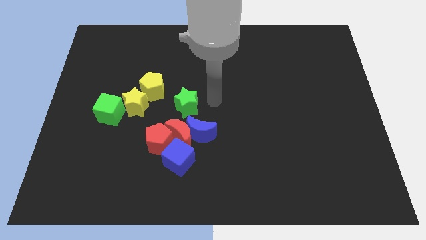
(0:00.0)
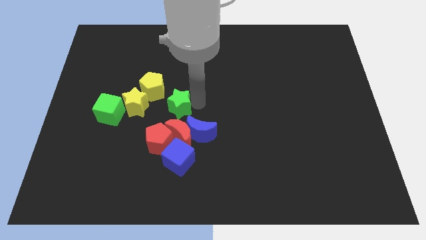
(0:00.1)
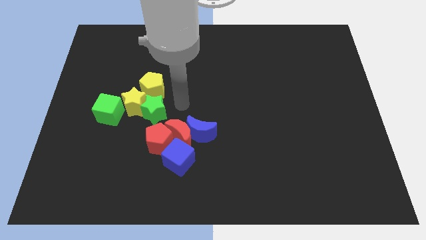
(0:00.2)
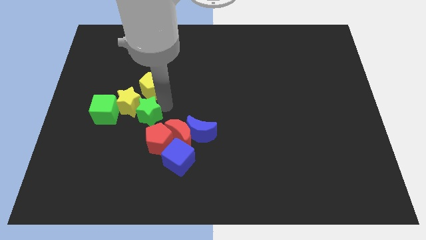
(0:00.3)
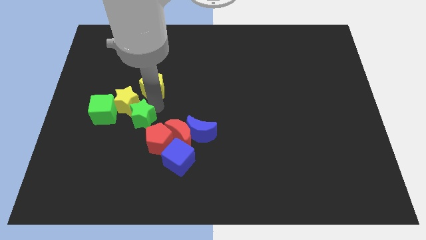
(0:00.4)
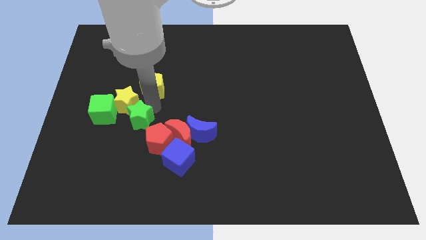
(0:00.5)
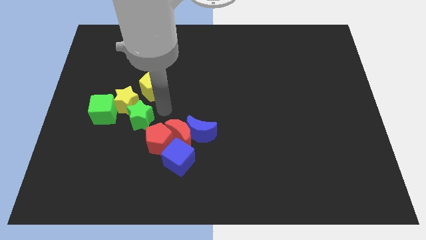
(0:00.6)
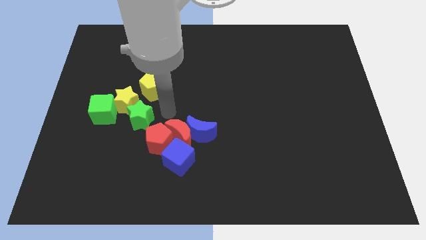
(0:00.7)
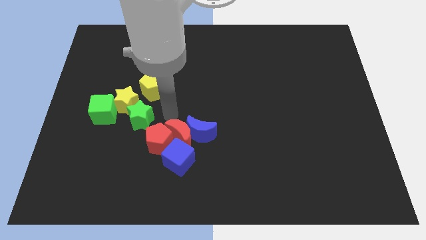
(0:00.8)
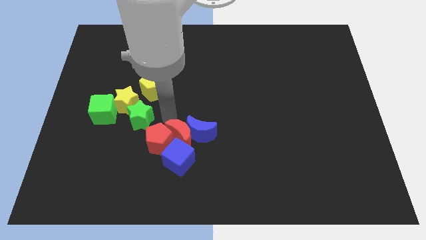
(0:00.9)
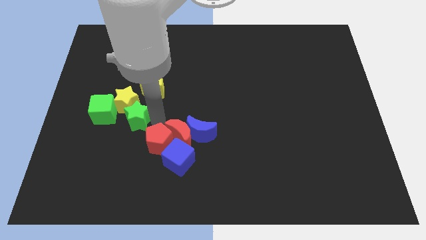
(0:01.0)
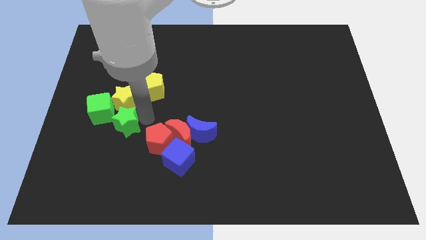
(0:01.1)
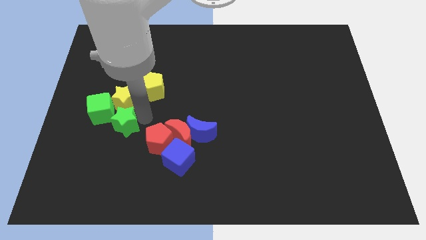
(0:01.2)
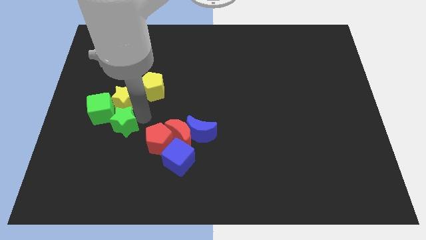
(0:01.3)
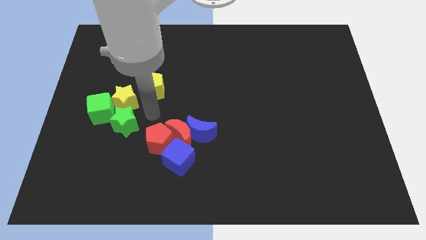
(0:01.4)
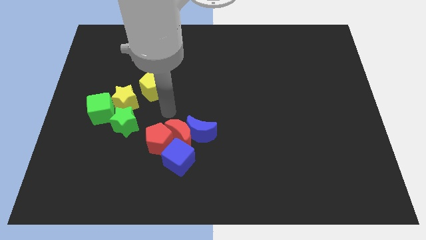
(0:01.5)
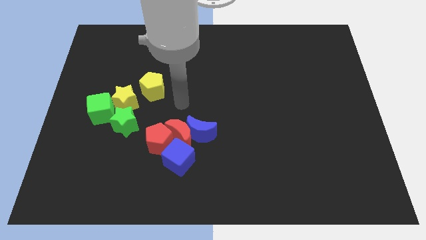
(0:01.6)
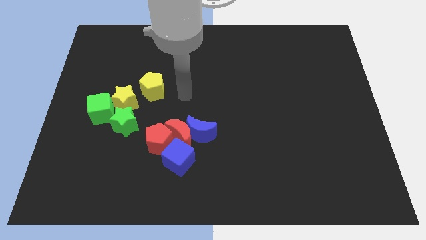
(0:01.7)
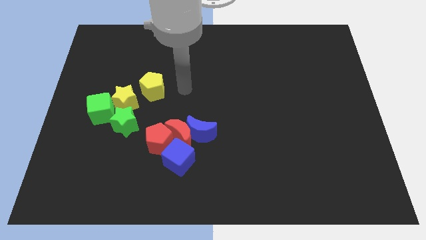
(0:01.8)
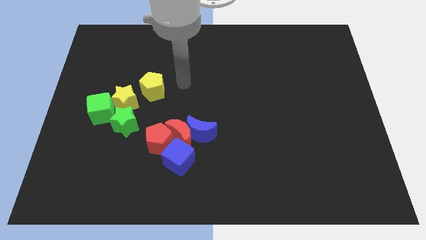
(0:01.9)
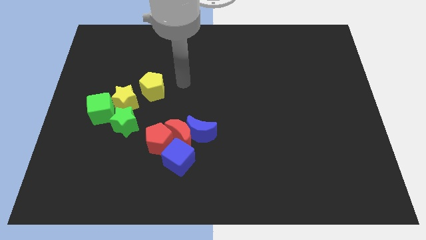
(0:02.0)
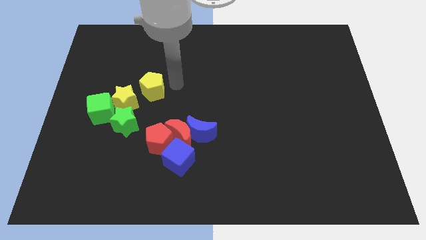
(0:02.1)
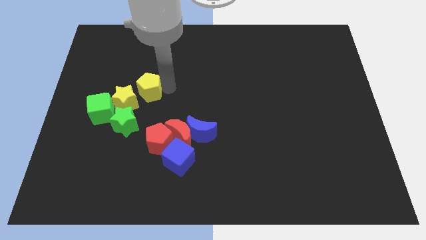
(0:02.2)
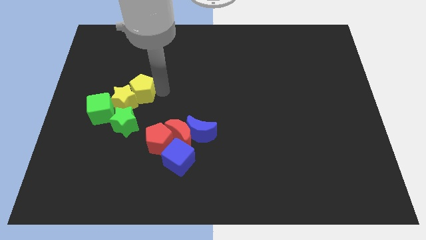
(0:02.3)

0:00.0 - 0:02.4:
push the green star into the bottom of the green cube

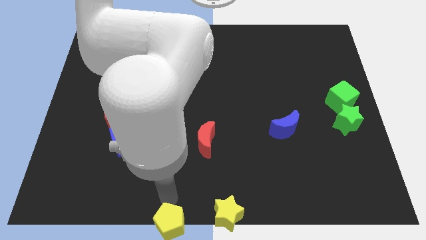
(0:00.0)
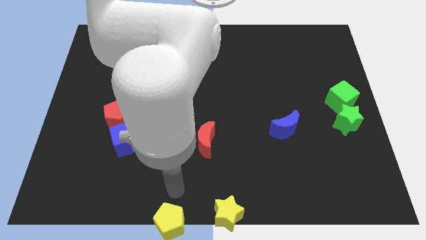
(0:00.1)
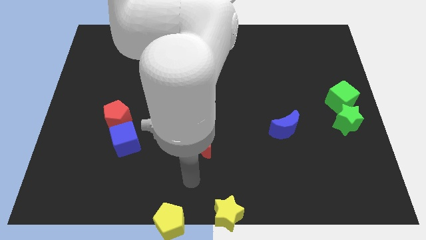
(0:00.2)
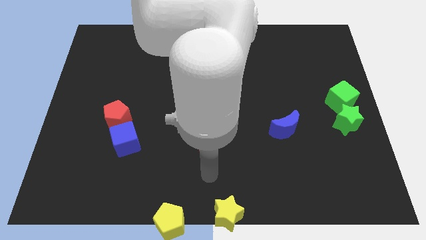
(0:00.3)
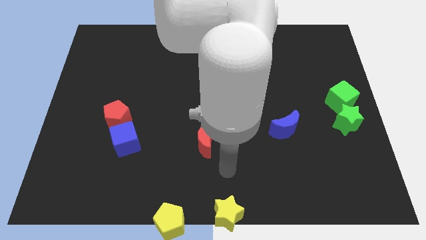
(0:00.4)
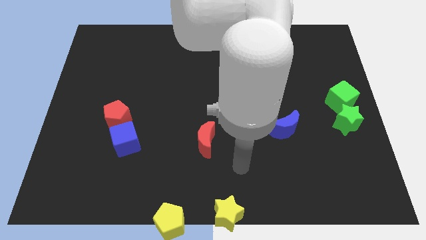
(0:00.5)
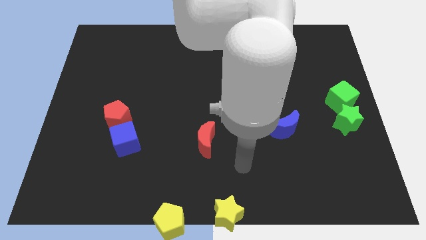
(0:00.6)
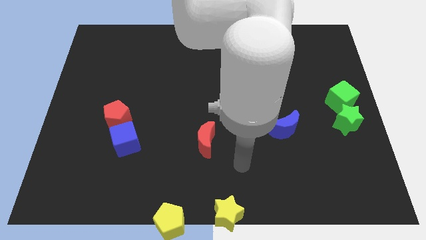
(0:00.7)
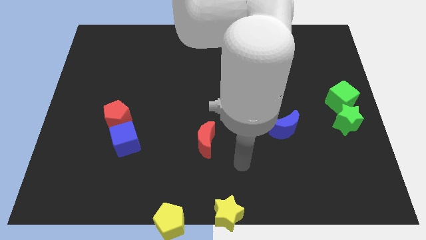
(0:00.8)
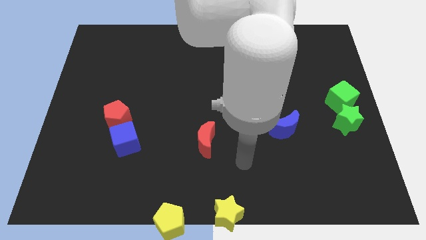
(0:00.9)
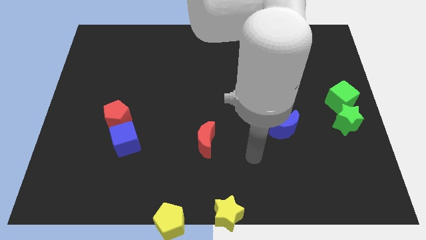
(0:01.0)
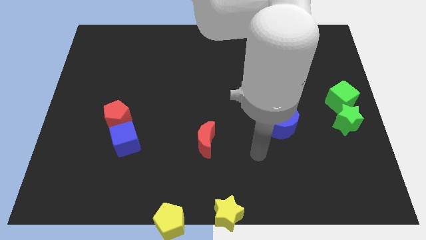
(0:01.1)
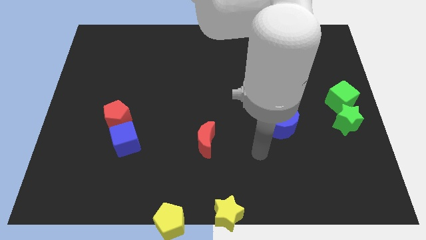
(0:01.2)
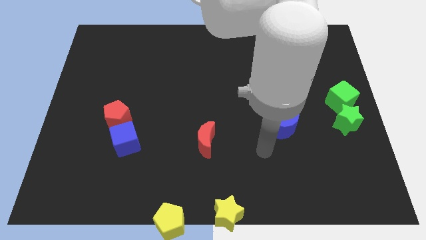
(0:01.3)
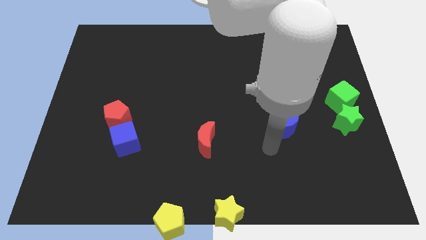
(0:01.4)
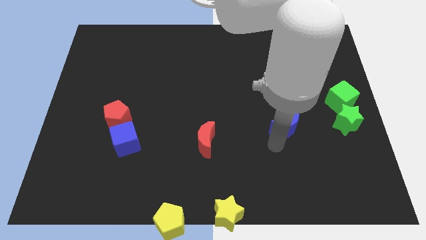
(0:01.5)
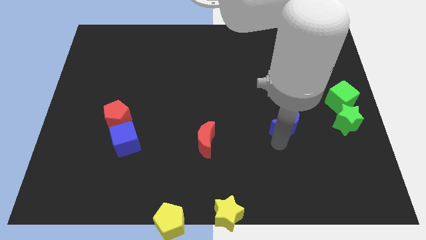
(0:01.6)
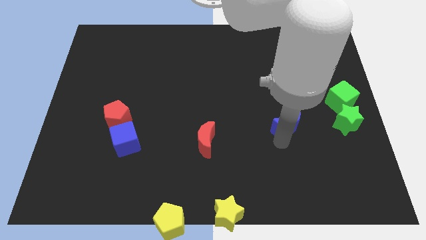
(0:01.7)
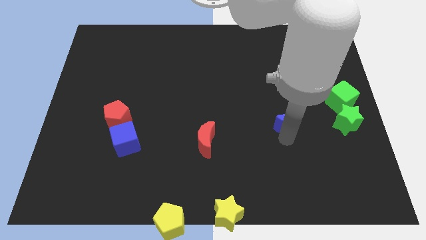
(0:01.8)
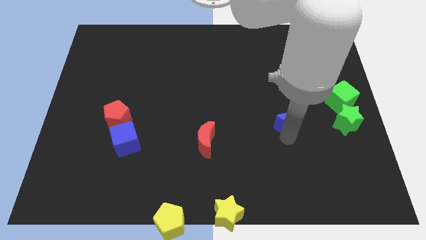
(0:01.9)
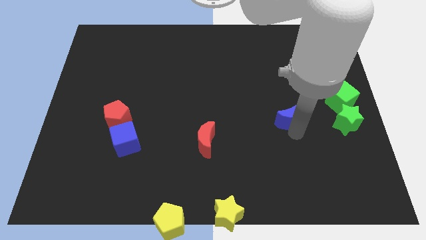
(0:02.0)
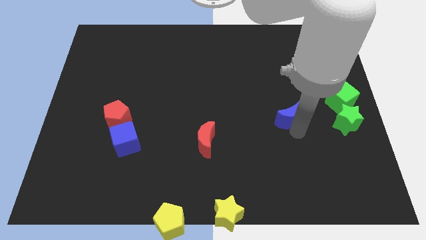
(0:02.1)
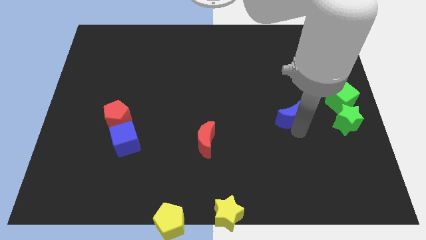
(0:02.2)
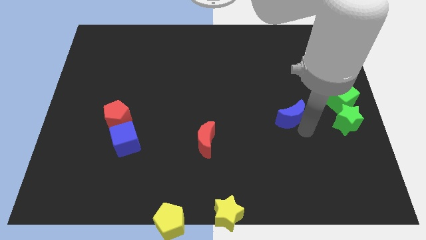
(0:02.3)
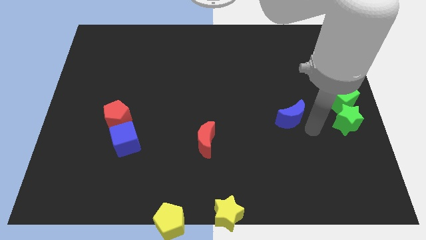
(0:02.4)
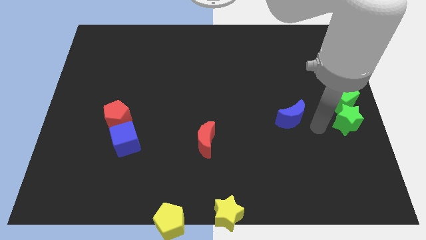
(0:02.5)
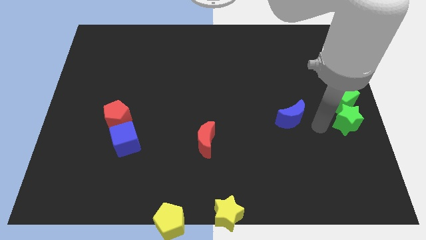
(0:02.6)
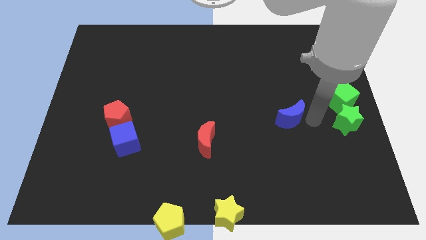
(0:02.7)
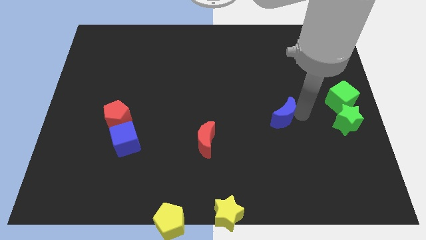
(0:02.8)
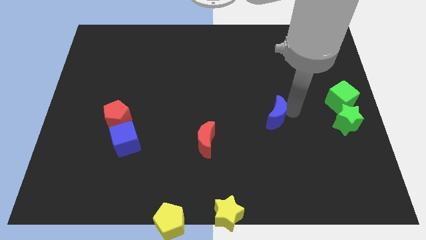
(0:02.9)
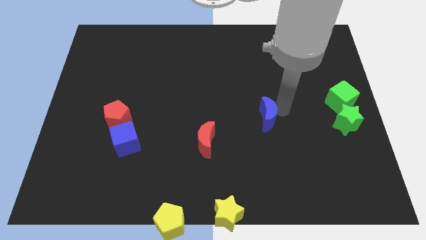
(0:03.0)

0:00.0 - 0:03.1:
place the blue moon to the left of the green star

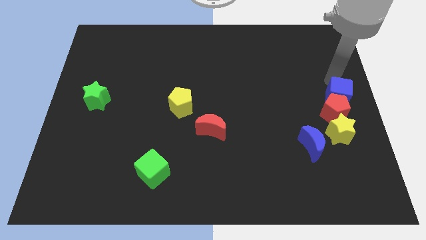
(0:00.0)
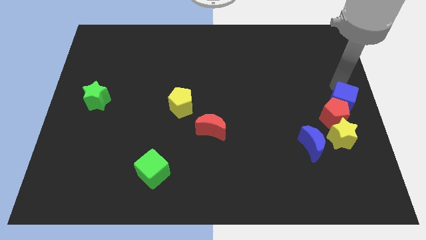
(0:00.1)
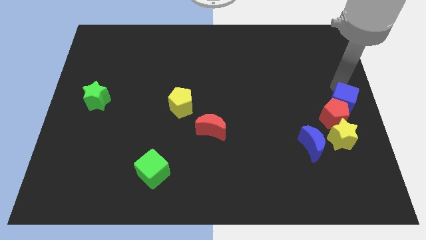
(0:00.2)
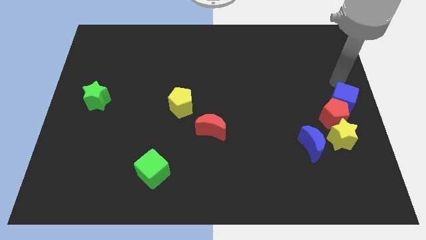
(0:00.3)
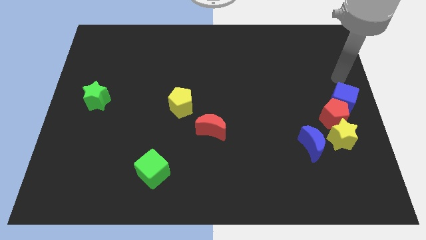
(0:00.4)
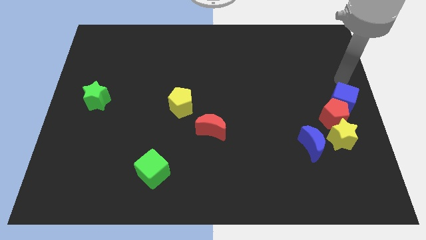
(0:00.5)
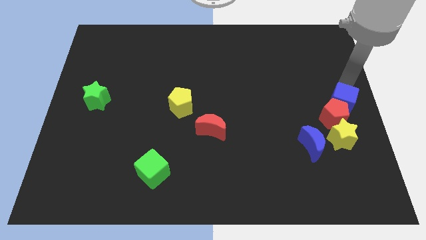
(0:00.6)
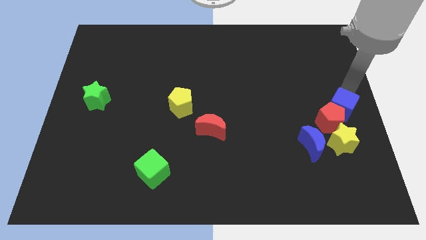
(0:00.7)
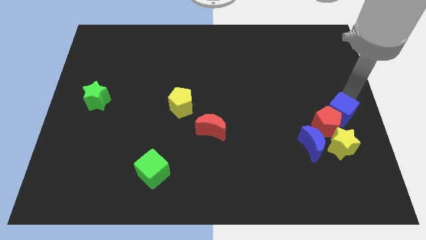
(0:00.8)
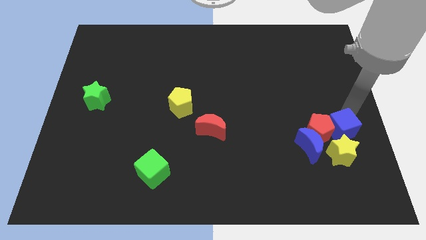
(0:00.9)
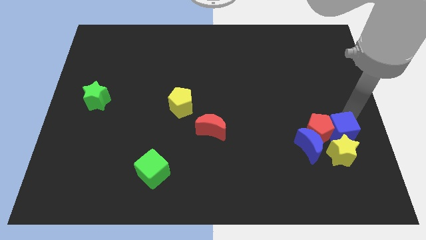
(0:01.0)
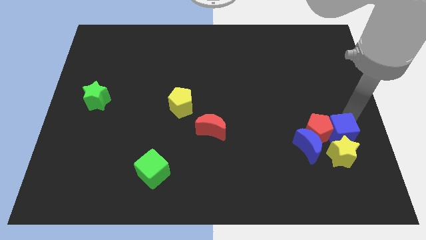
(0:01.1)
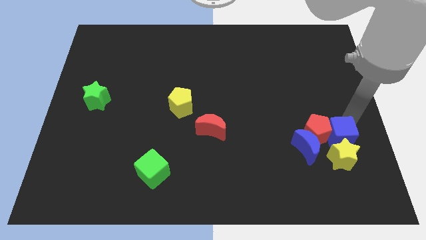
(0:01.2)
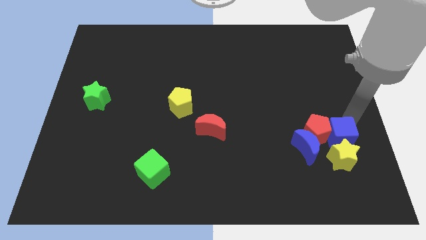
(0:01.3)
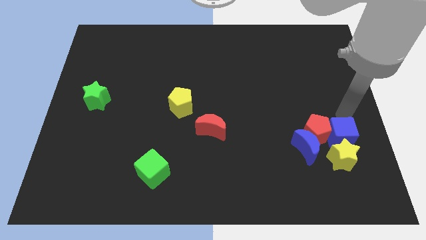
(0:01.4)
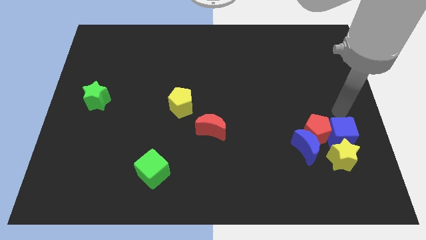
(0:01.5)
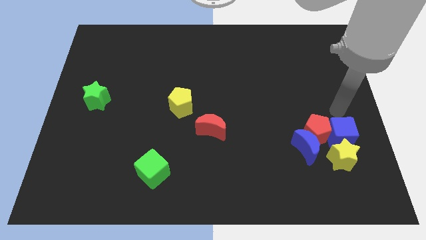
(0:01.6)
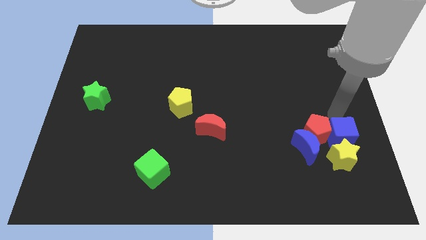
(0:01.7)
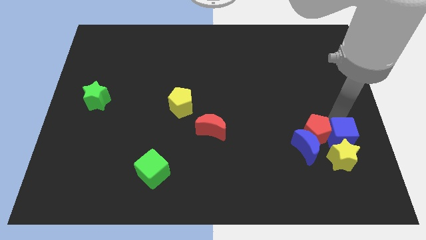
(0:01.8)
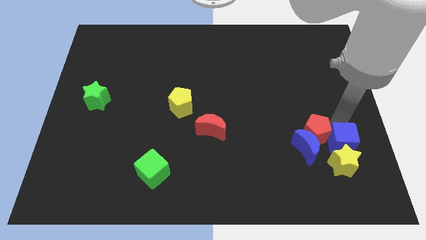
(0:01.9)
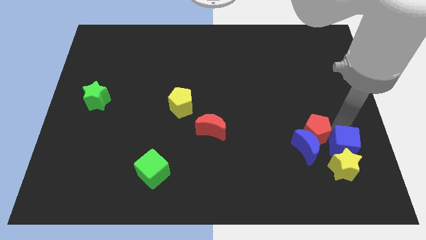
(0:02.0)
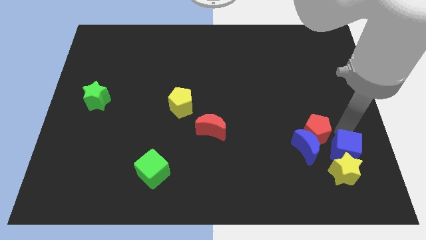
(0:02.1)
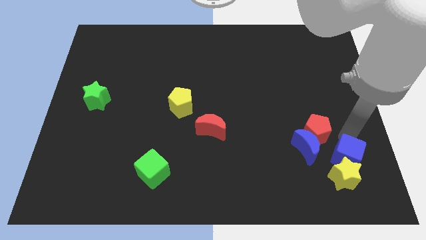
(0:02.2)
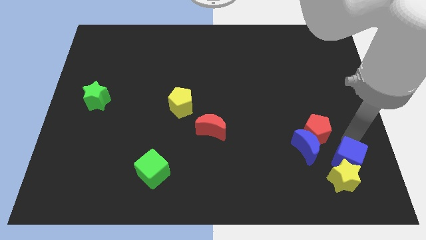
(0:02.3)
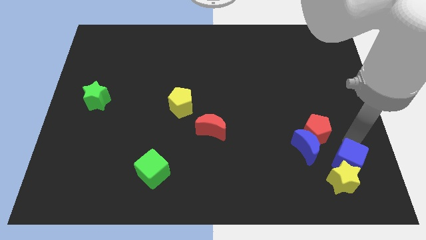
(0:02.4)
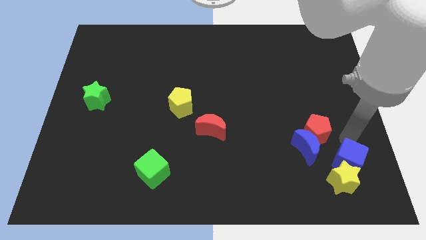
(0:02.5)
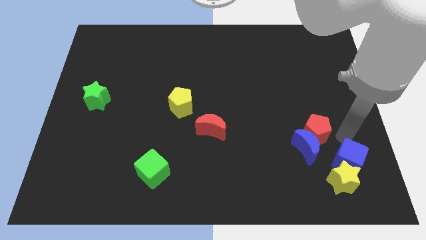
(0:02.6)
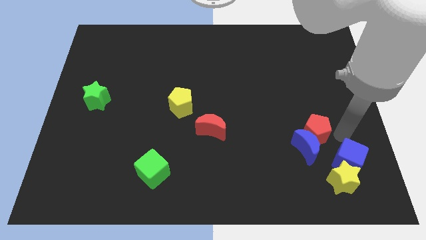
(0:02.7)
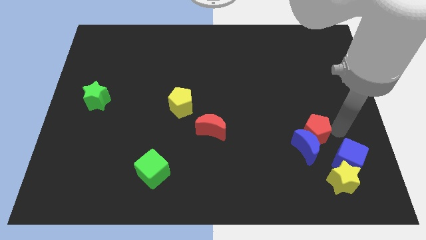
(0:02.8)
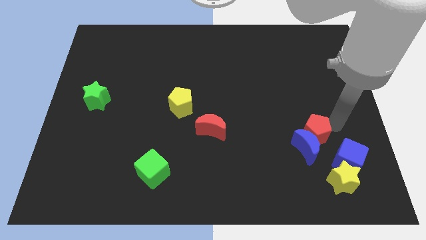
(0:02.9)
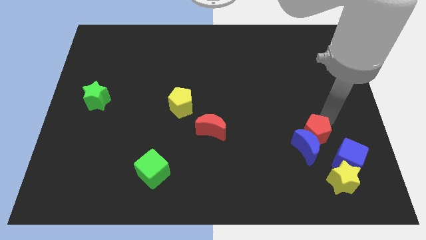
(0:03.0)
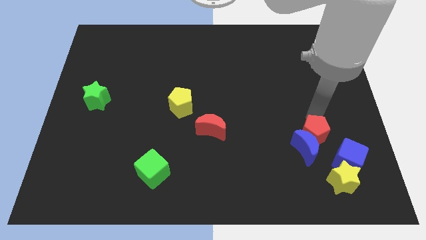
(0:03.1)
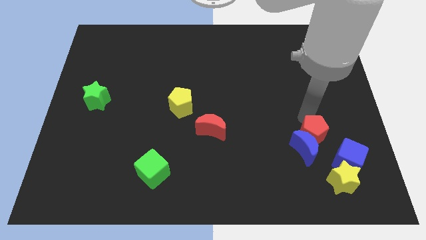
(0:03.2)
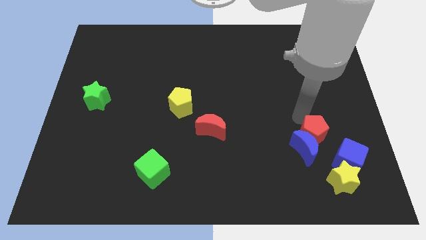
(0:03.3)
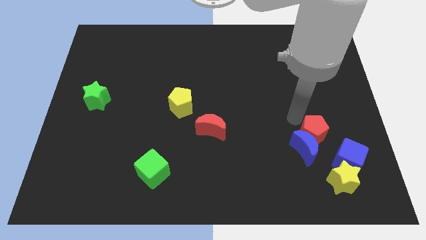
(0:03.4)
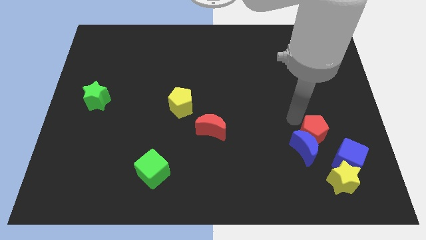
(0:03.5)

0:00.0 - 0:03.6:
separate the blue cube and red pentagon
